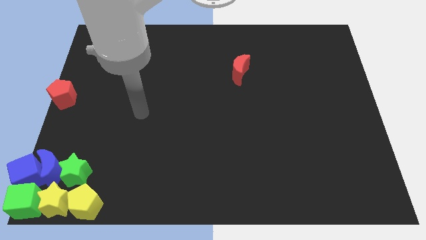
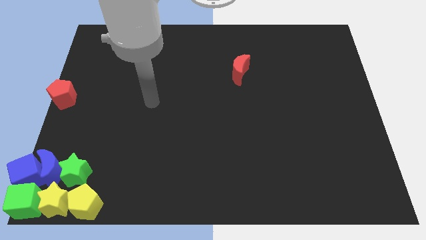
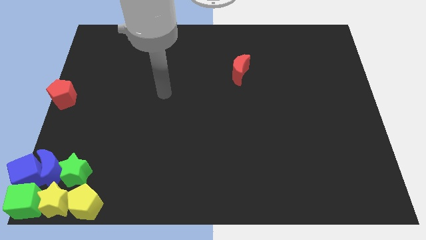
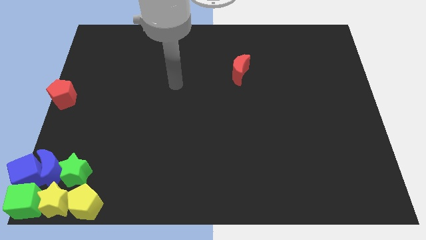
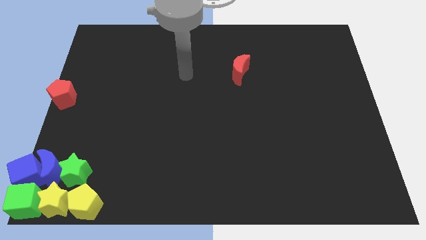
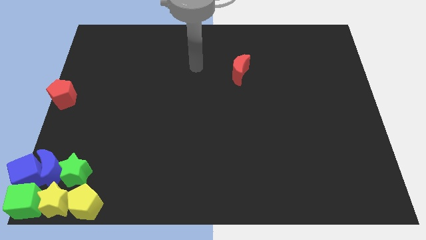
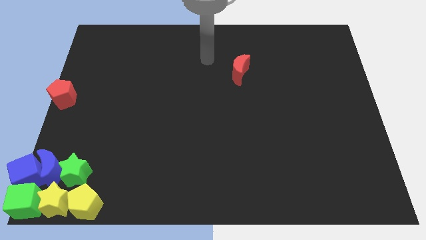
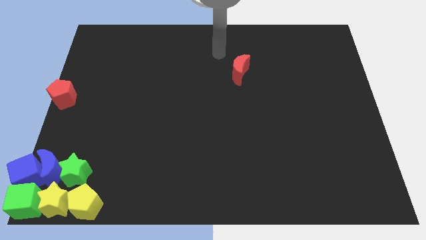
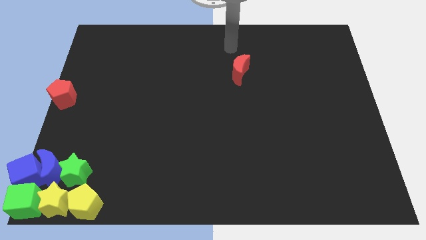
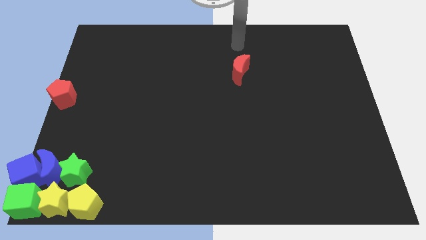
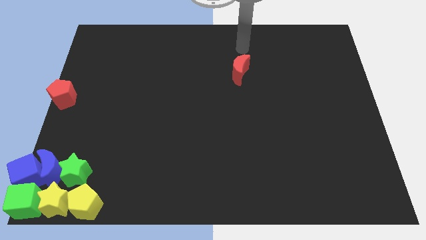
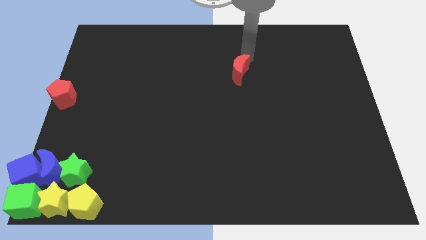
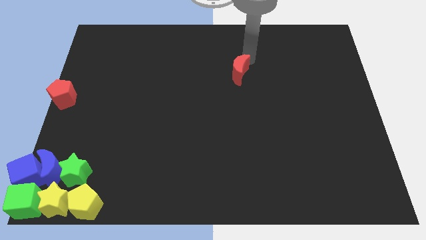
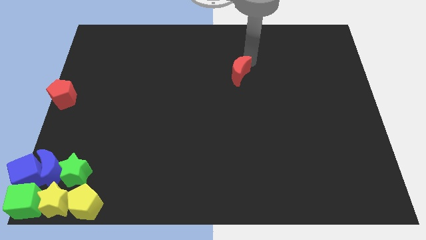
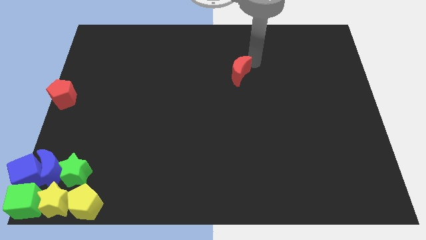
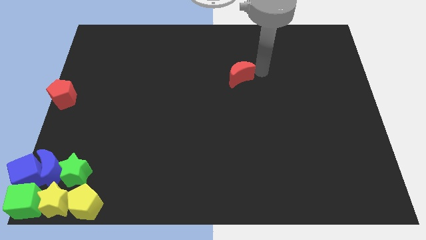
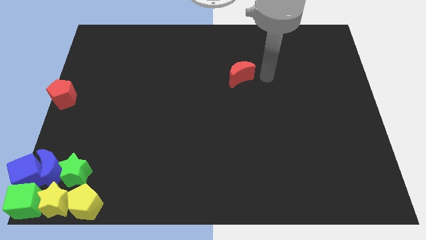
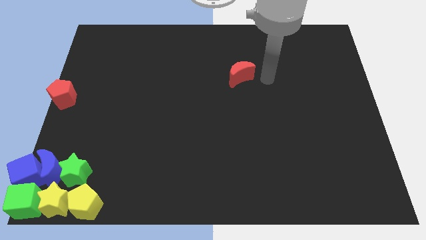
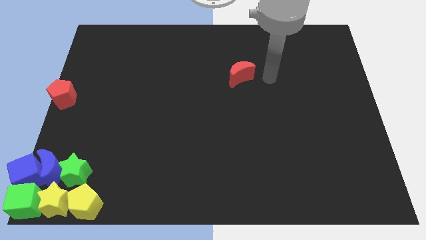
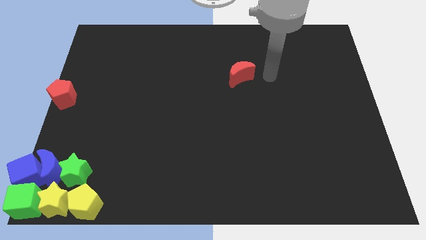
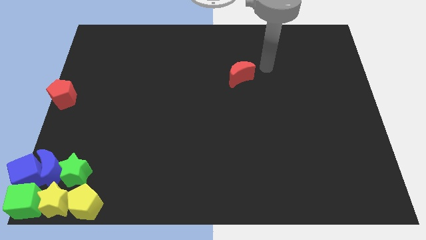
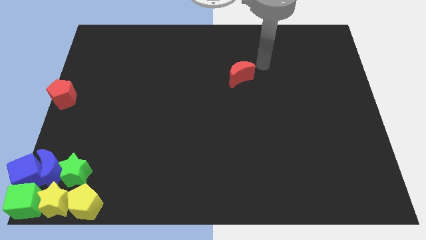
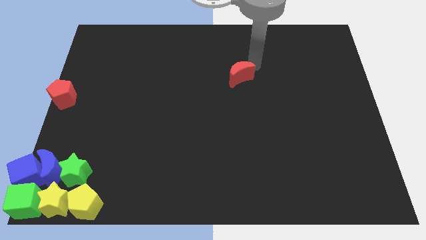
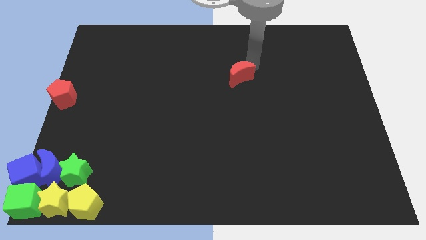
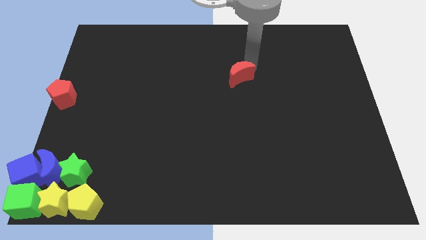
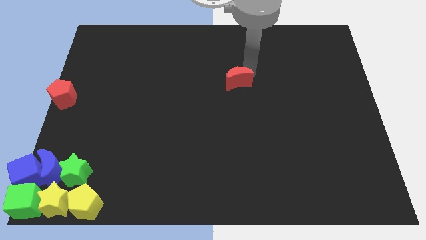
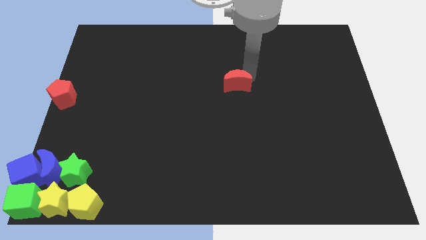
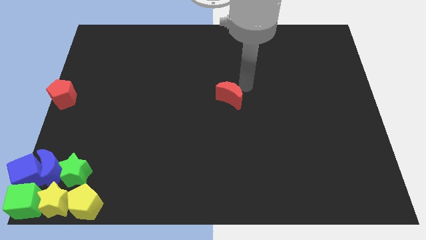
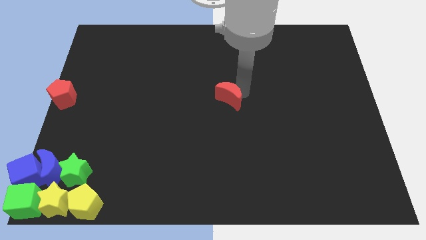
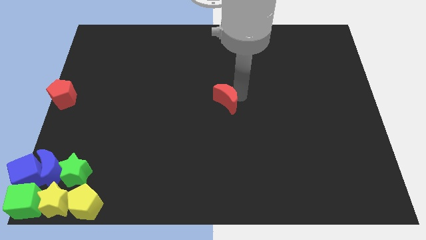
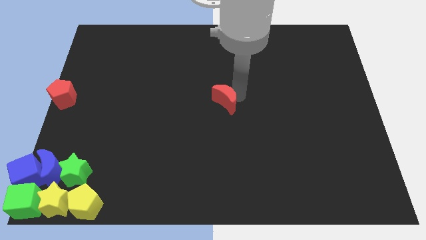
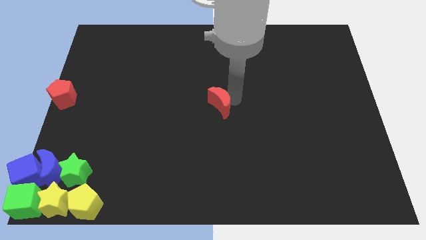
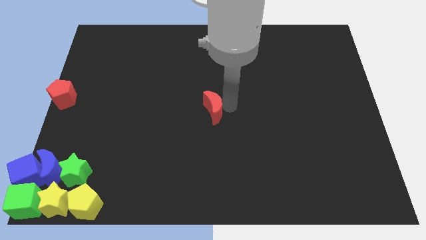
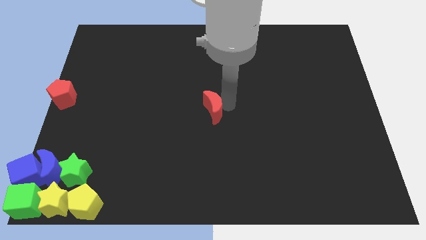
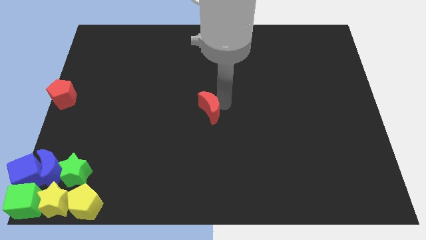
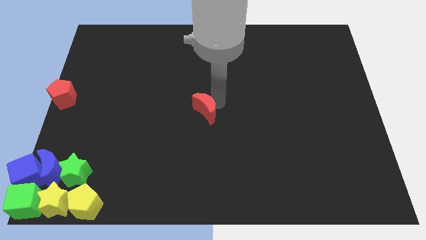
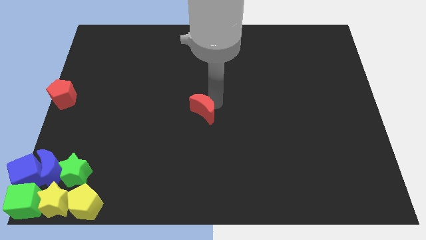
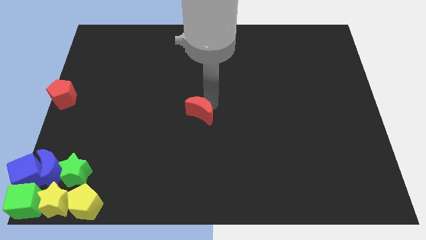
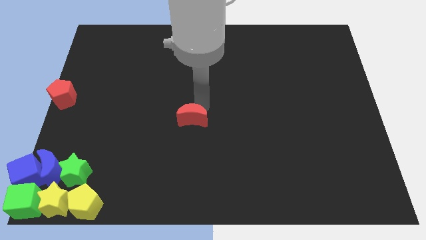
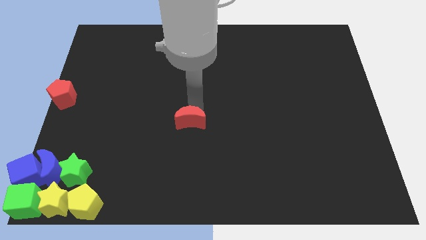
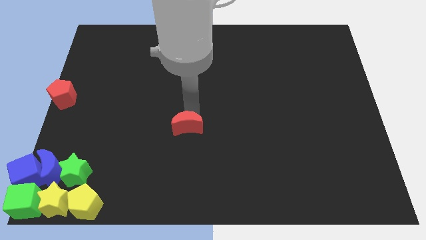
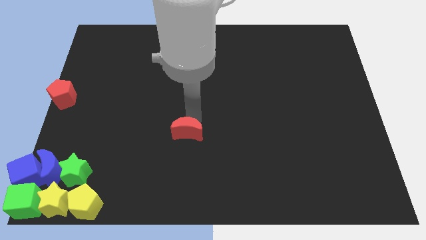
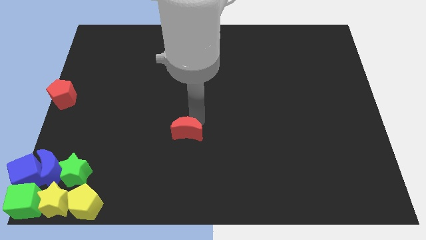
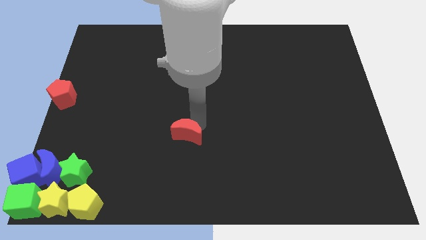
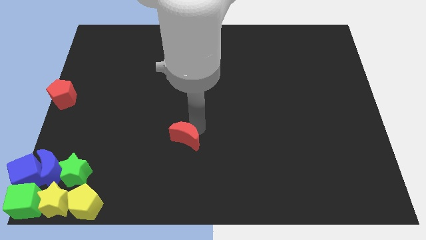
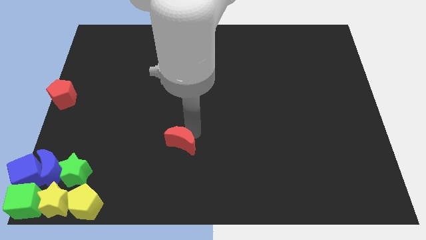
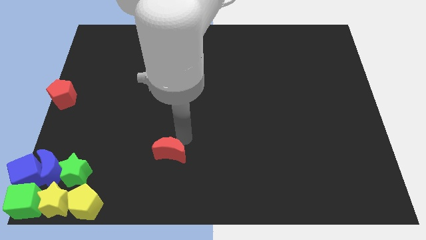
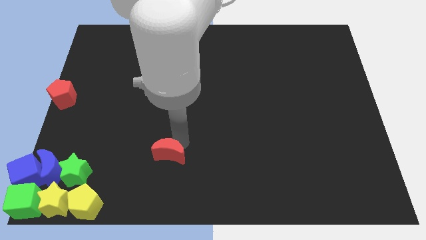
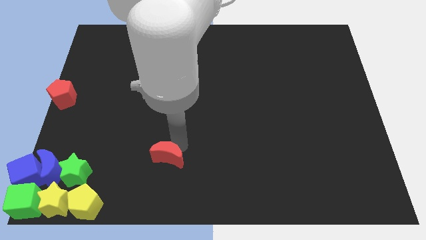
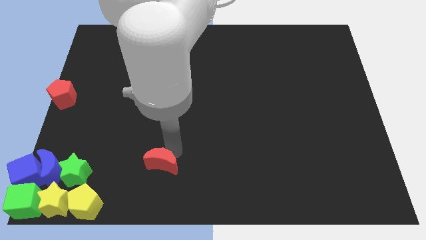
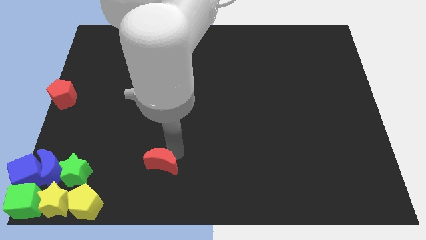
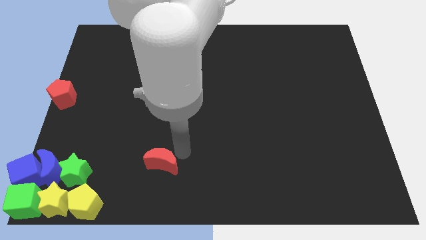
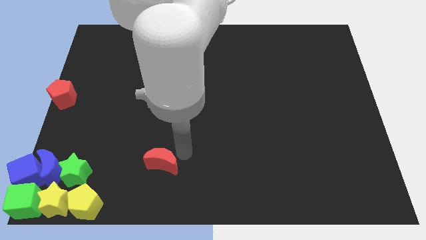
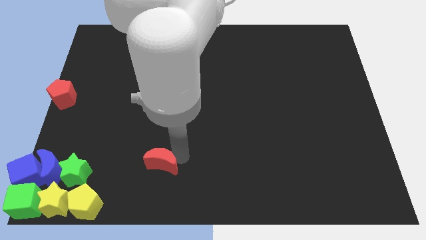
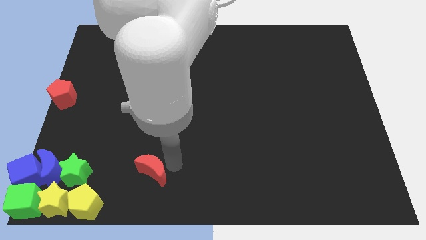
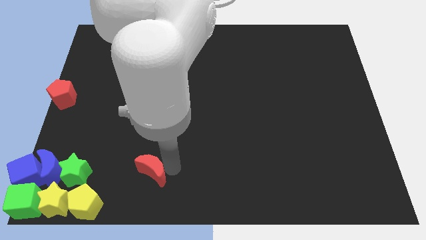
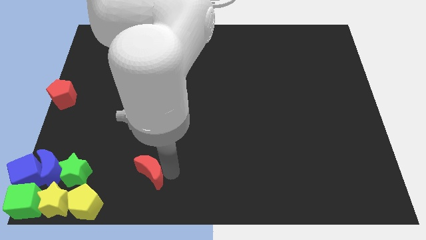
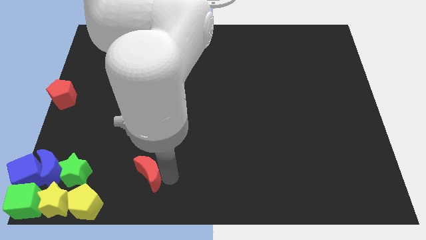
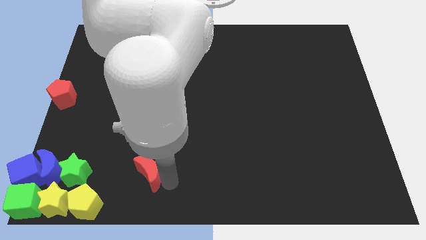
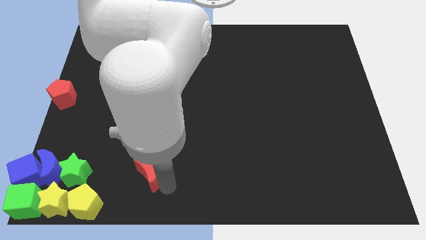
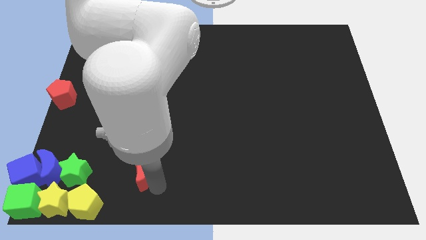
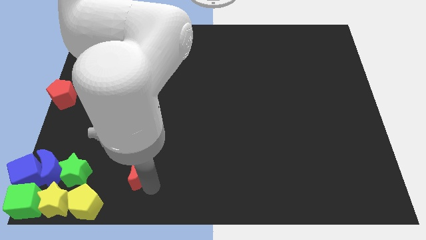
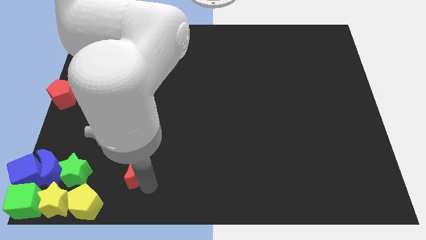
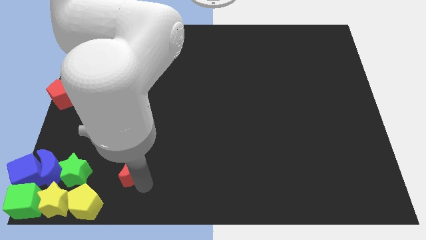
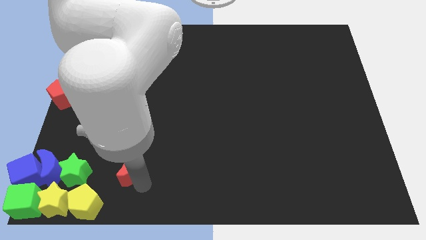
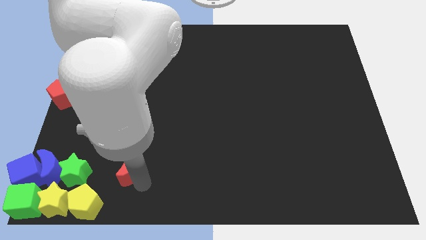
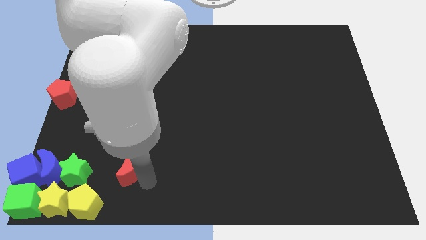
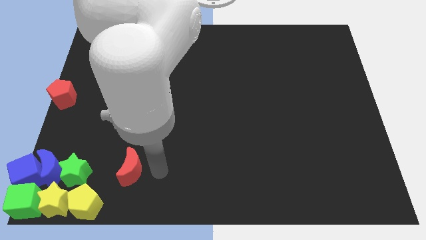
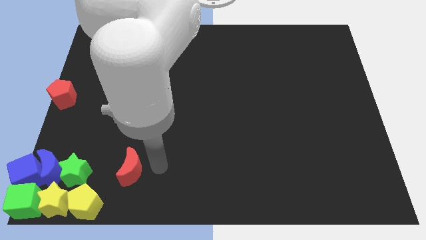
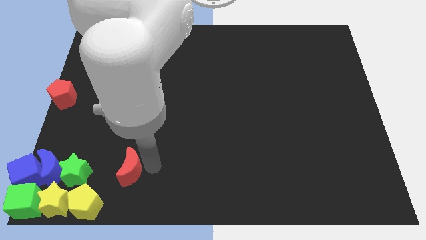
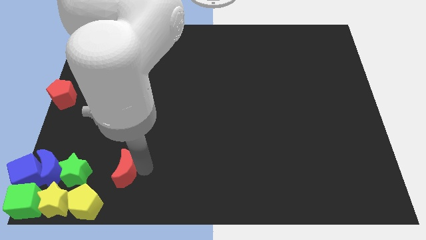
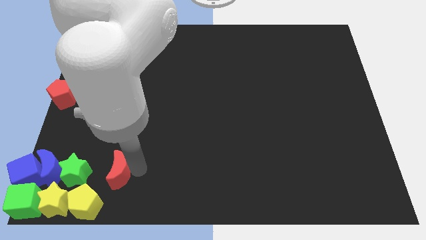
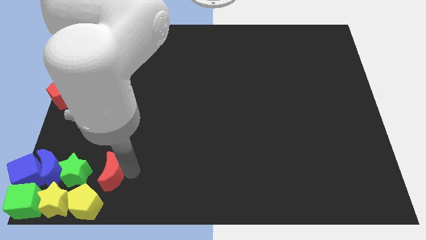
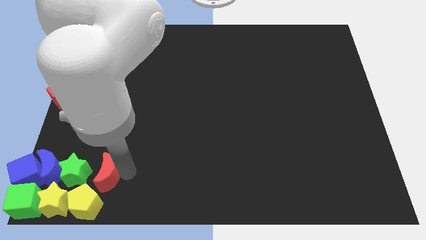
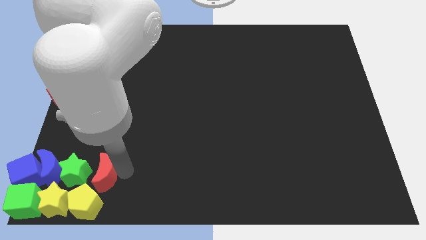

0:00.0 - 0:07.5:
place the red moon to the right side of green star

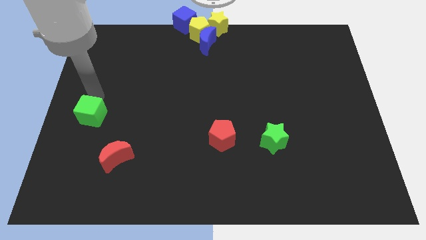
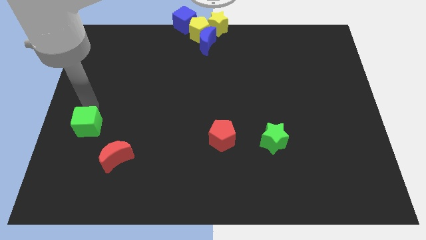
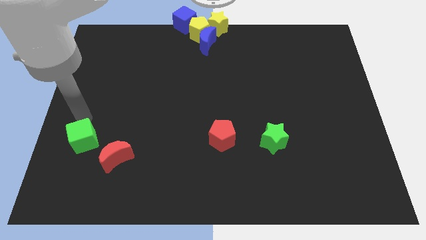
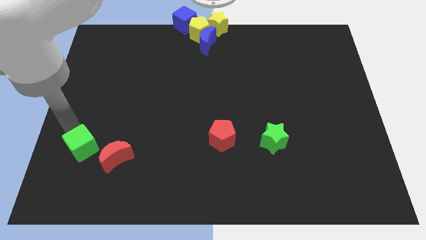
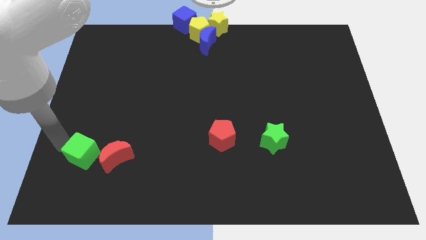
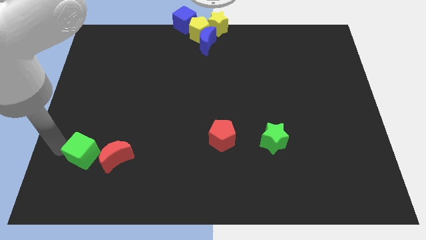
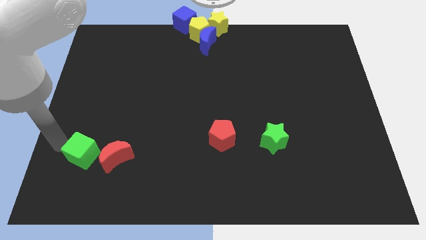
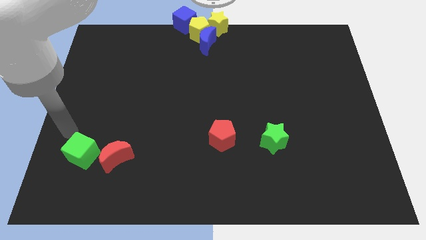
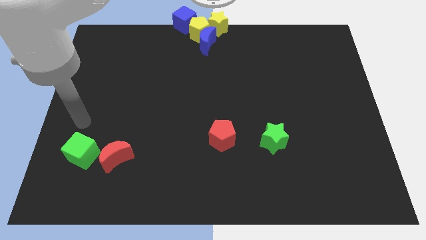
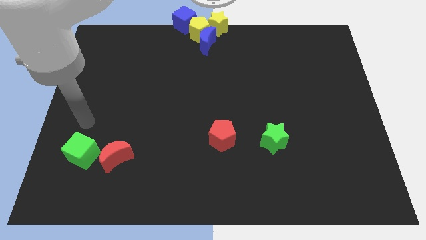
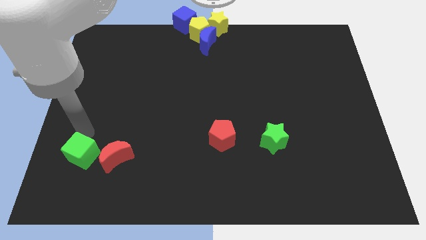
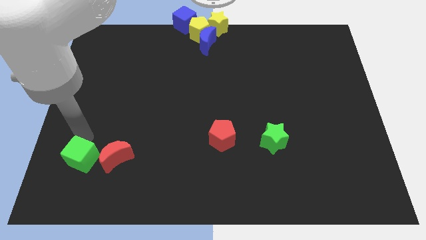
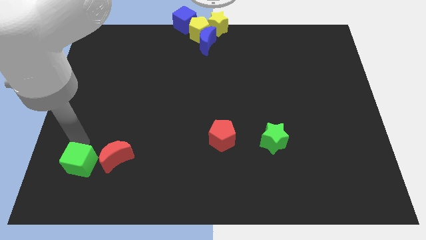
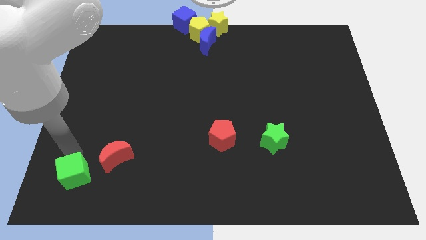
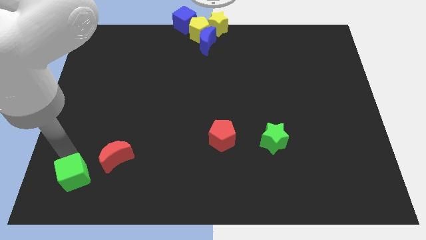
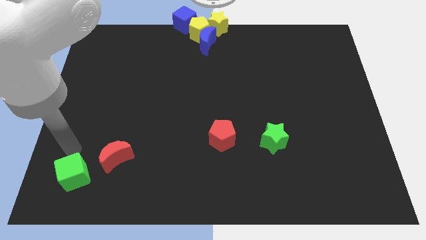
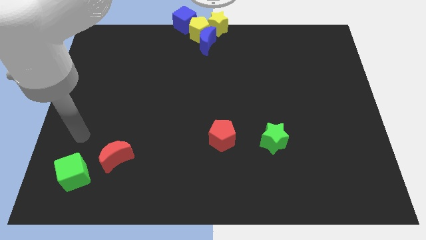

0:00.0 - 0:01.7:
push the green cube slightly downwards
